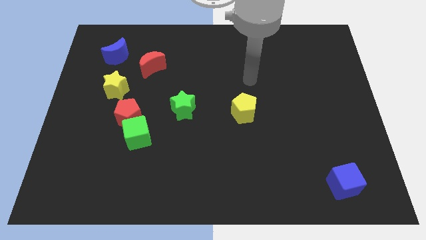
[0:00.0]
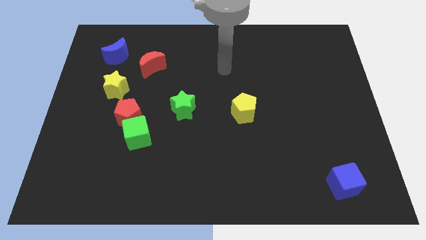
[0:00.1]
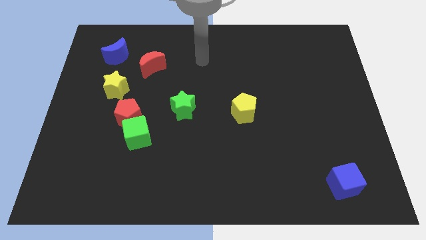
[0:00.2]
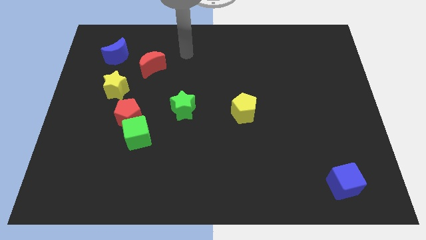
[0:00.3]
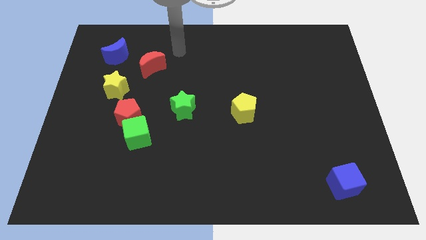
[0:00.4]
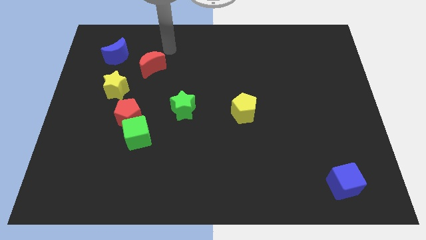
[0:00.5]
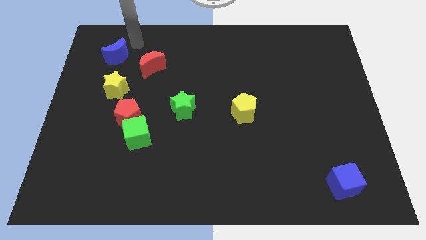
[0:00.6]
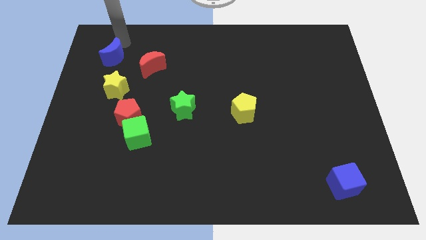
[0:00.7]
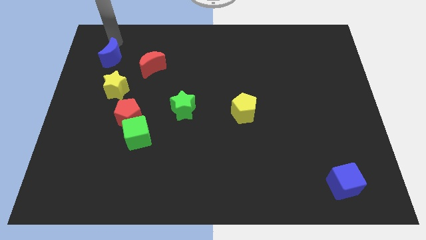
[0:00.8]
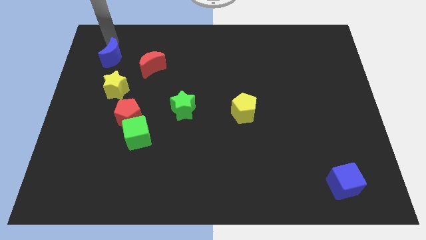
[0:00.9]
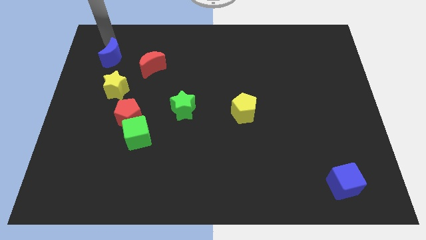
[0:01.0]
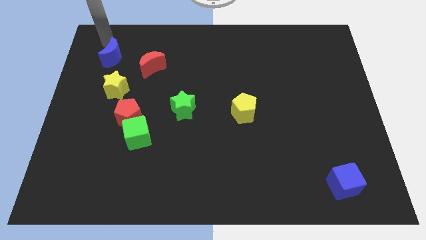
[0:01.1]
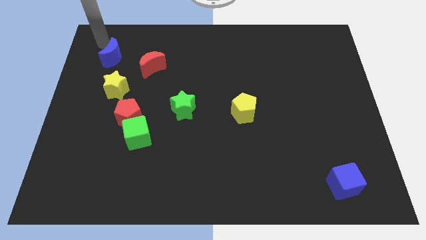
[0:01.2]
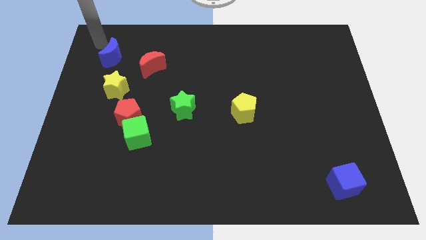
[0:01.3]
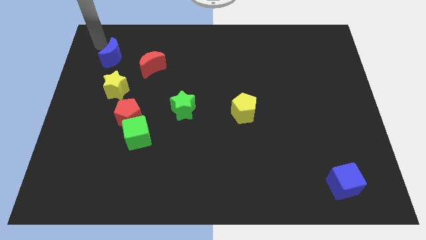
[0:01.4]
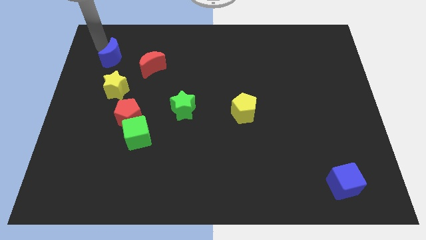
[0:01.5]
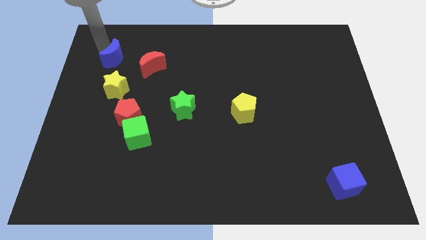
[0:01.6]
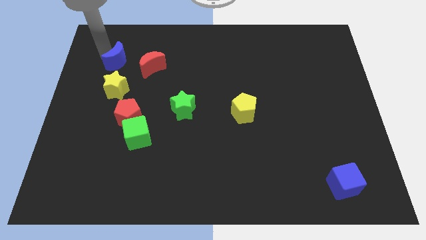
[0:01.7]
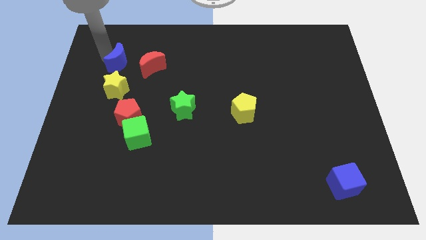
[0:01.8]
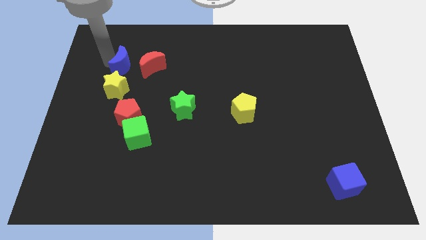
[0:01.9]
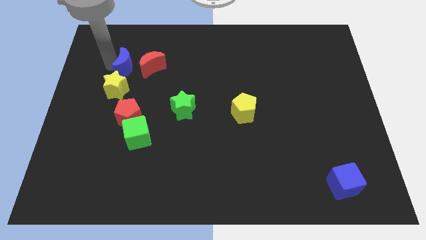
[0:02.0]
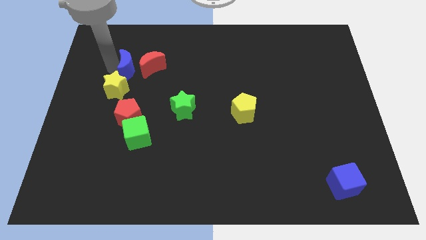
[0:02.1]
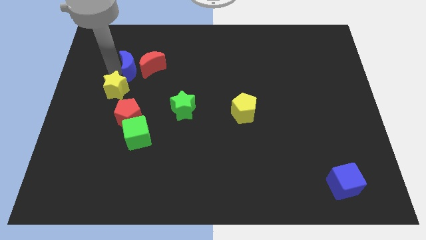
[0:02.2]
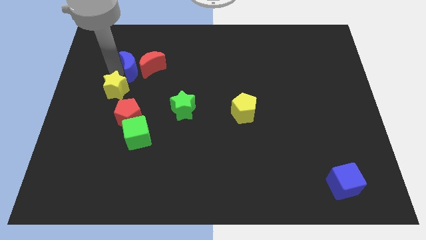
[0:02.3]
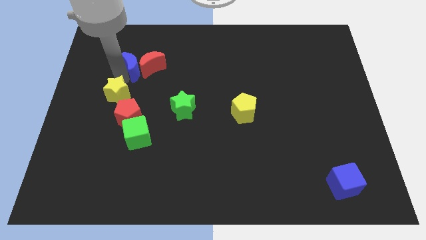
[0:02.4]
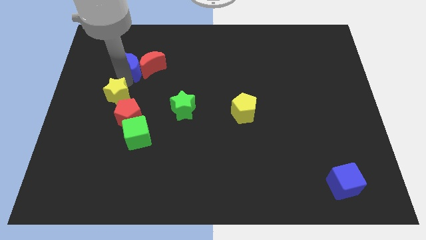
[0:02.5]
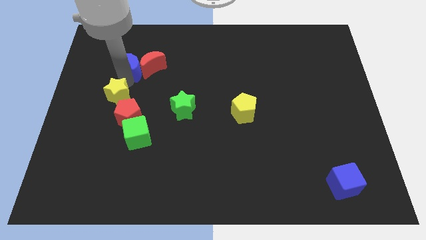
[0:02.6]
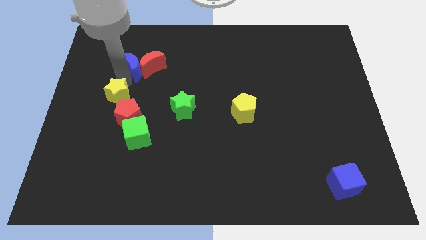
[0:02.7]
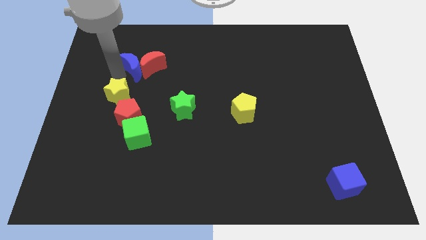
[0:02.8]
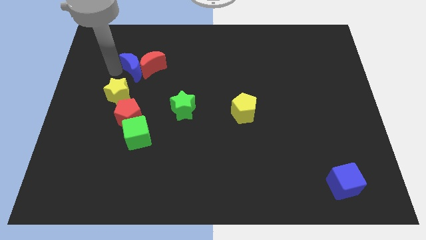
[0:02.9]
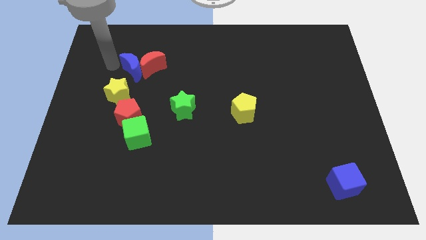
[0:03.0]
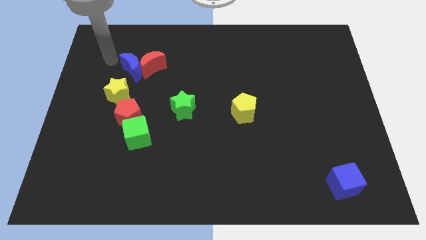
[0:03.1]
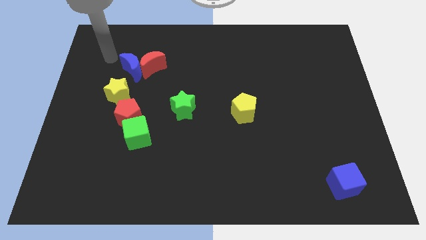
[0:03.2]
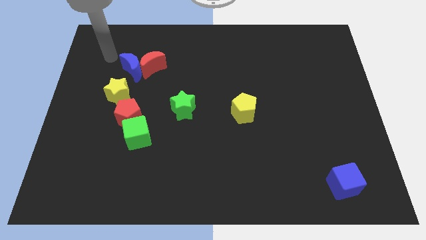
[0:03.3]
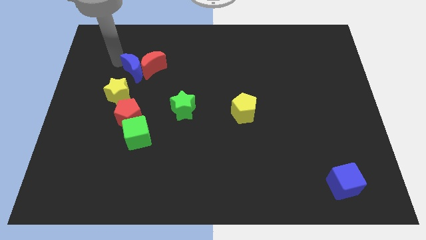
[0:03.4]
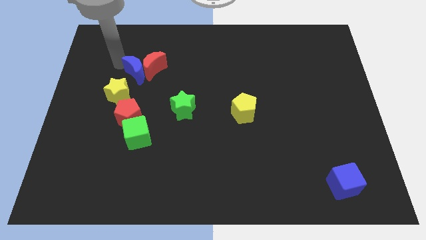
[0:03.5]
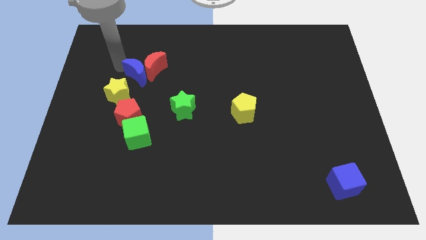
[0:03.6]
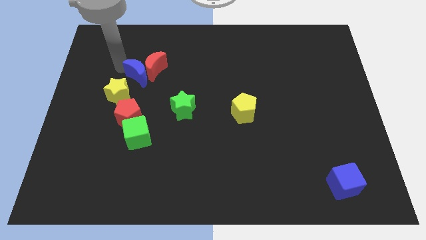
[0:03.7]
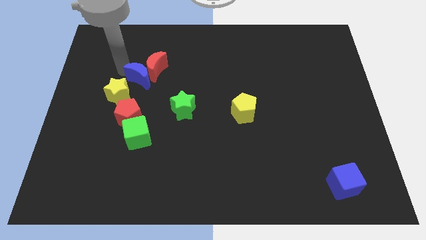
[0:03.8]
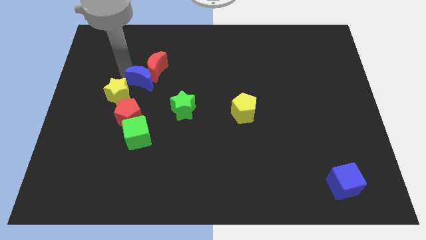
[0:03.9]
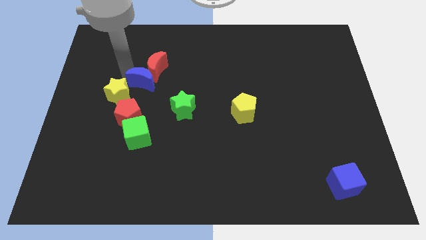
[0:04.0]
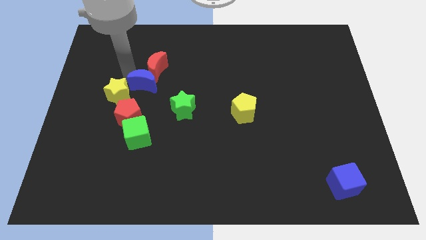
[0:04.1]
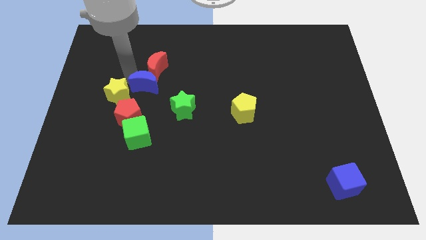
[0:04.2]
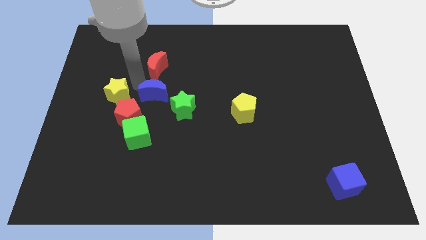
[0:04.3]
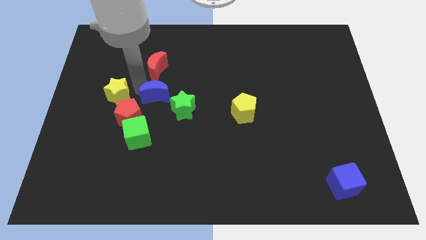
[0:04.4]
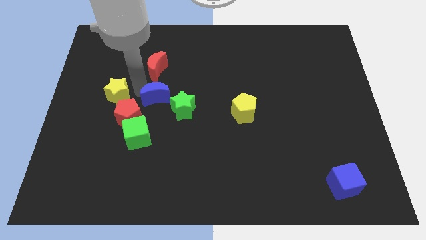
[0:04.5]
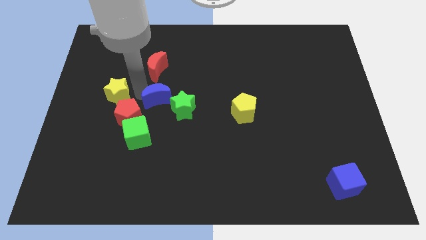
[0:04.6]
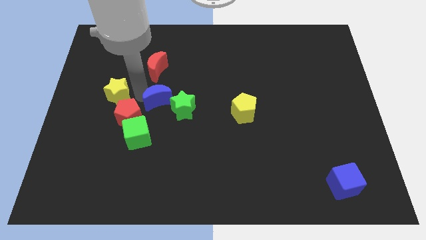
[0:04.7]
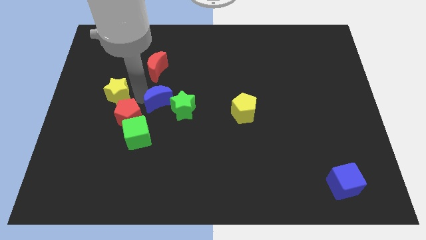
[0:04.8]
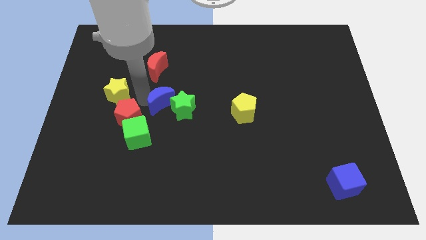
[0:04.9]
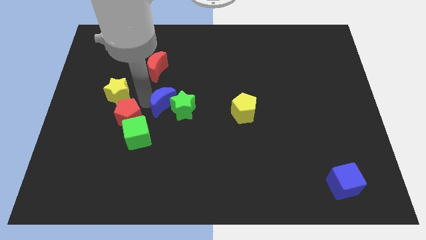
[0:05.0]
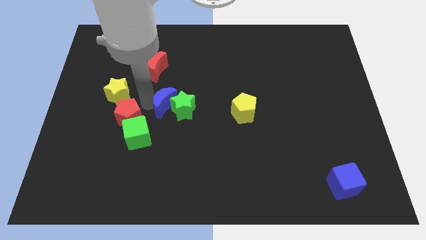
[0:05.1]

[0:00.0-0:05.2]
slide the blue moon next to the green star

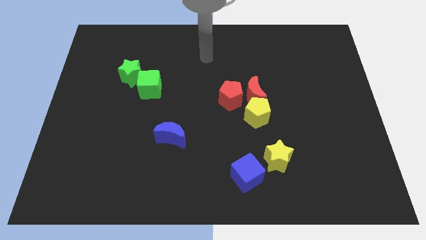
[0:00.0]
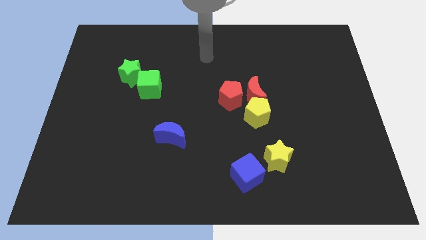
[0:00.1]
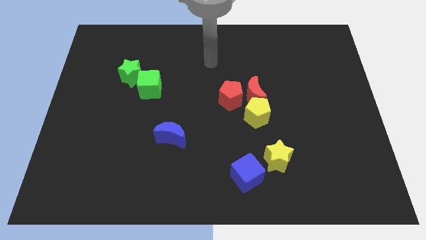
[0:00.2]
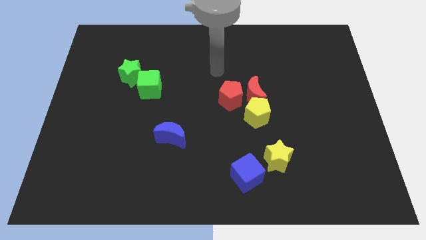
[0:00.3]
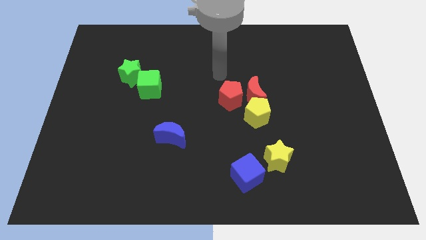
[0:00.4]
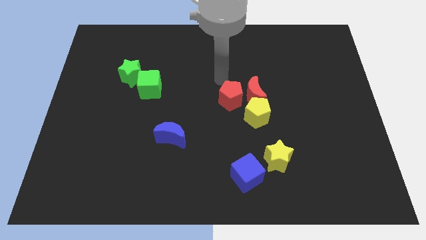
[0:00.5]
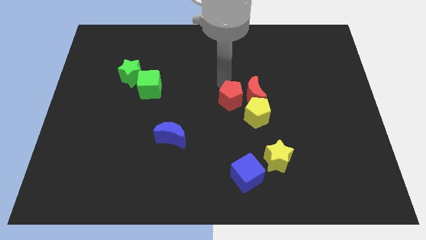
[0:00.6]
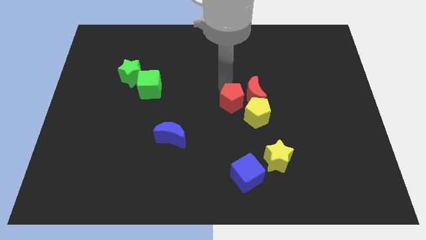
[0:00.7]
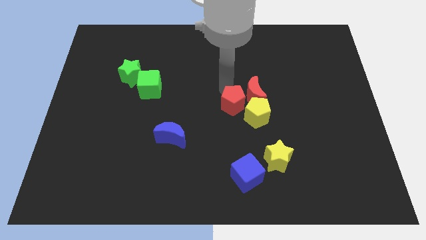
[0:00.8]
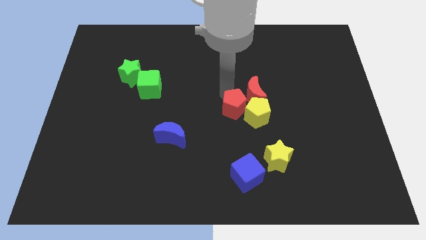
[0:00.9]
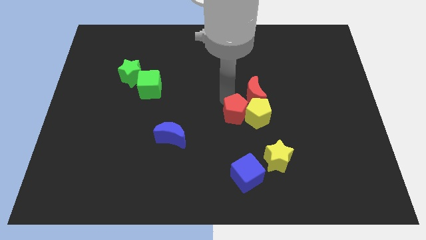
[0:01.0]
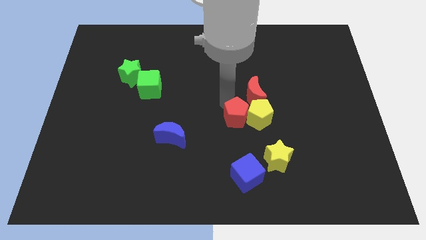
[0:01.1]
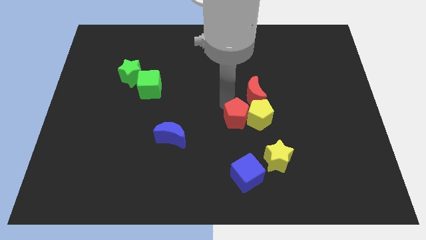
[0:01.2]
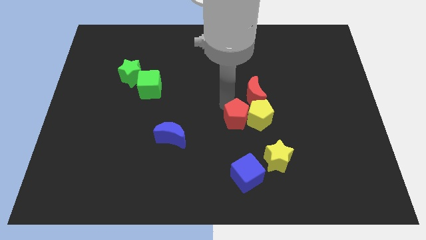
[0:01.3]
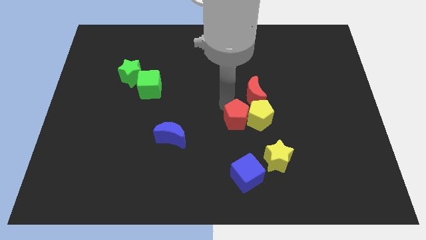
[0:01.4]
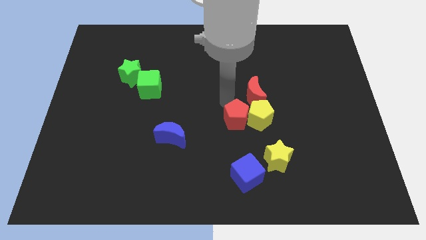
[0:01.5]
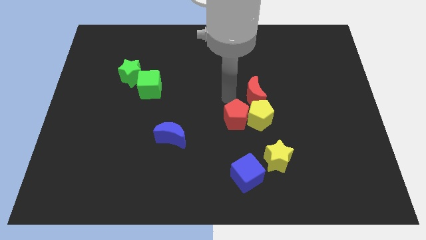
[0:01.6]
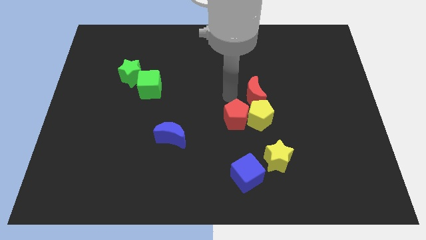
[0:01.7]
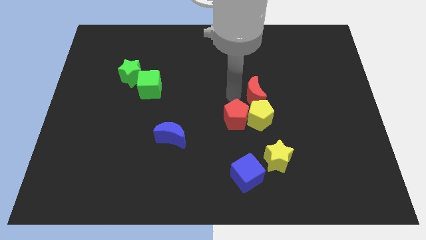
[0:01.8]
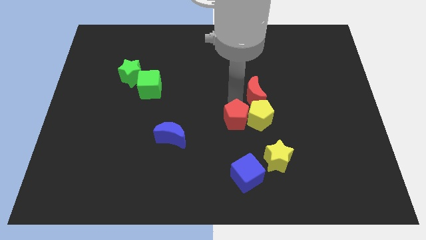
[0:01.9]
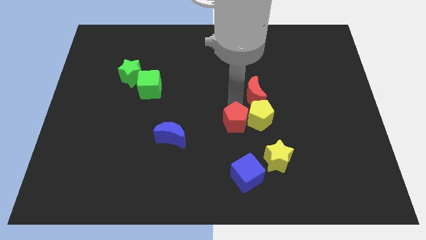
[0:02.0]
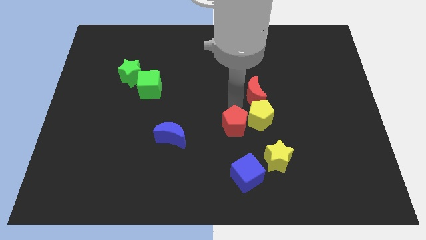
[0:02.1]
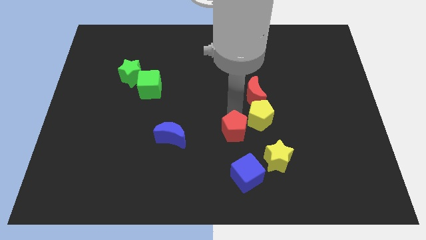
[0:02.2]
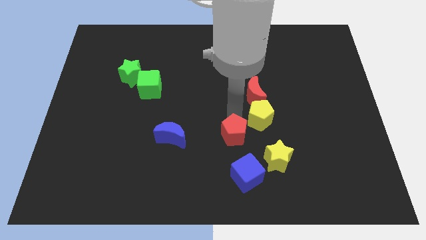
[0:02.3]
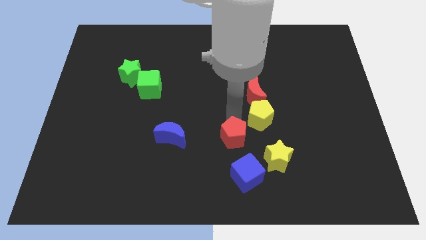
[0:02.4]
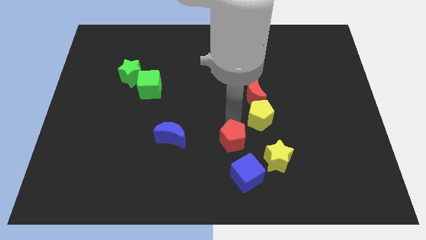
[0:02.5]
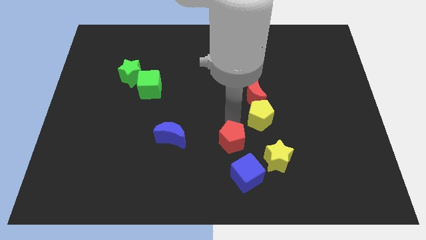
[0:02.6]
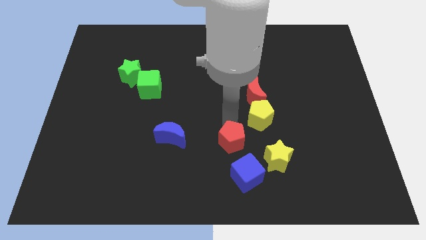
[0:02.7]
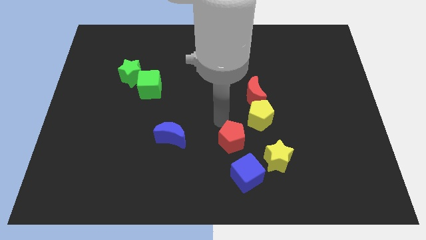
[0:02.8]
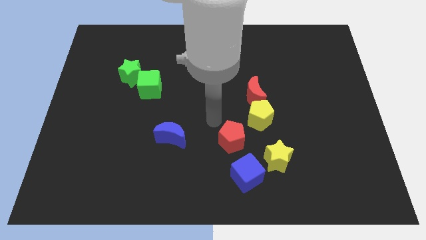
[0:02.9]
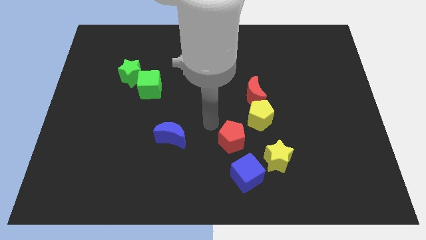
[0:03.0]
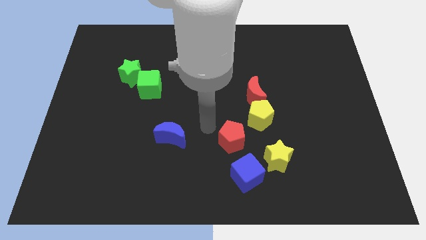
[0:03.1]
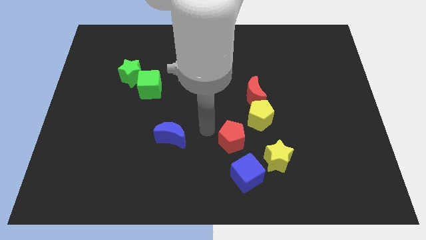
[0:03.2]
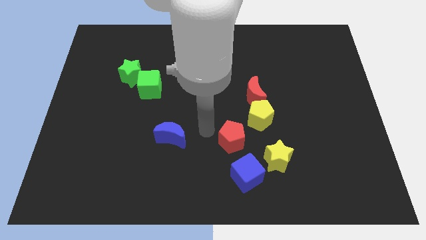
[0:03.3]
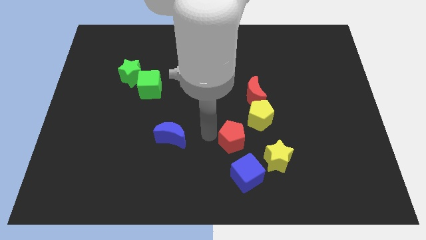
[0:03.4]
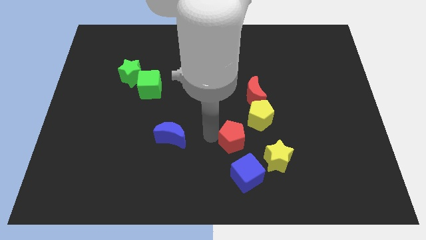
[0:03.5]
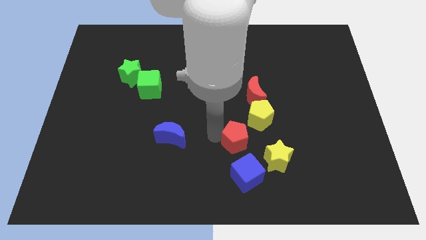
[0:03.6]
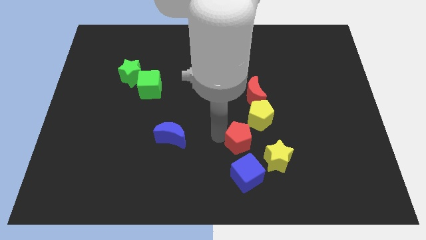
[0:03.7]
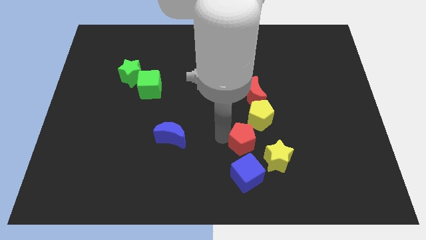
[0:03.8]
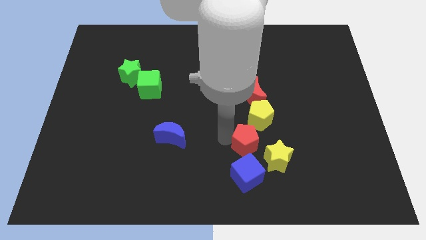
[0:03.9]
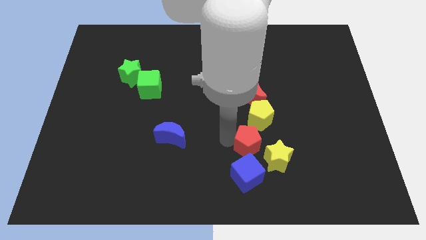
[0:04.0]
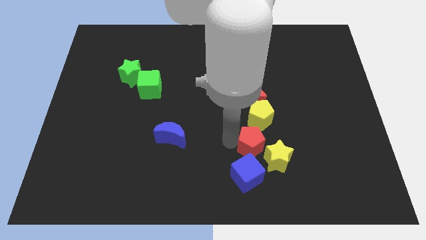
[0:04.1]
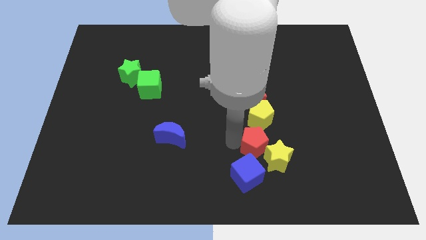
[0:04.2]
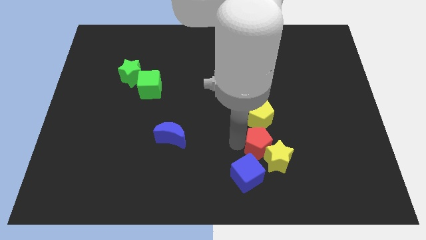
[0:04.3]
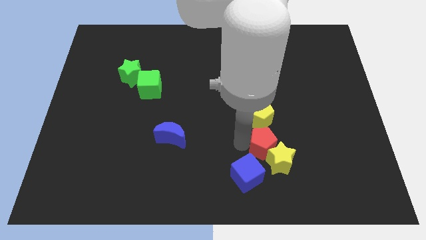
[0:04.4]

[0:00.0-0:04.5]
move the red pentagon towards the yellow star
